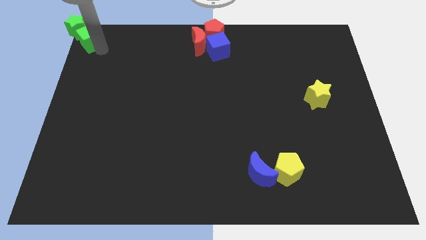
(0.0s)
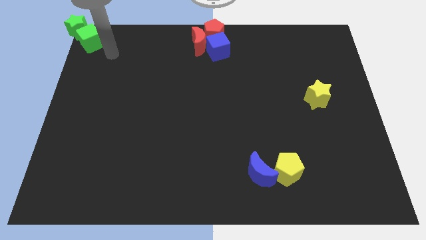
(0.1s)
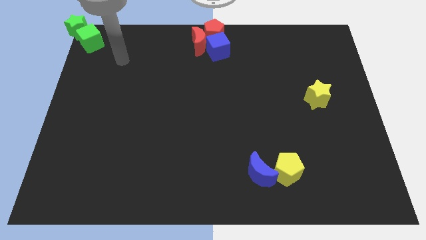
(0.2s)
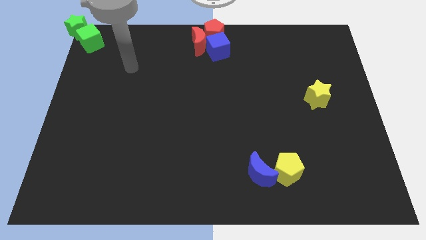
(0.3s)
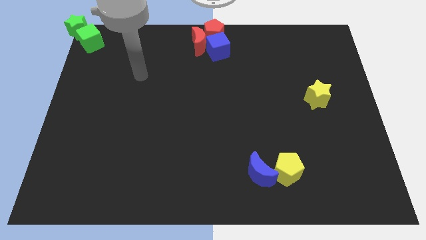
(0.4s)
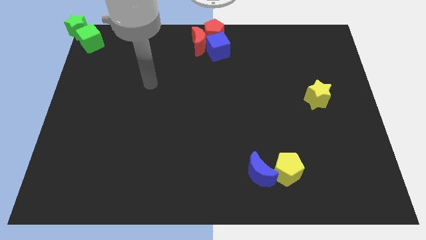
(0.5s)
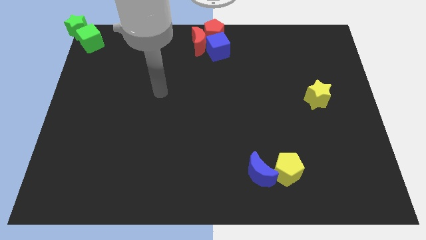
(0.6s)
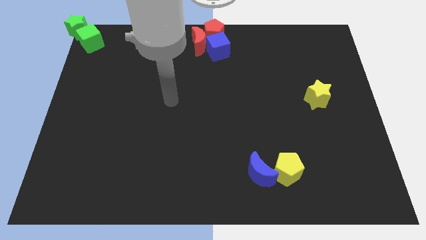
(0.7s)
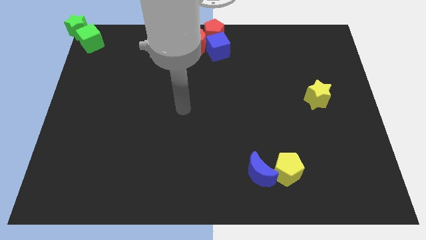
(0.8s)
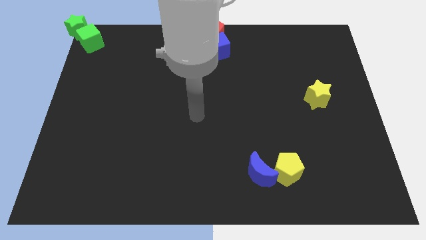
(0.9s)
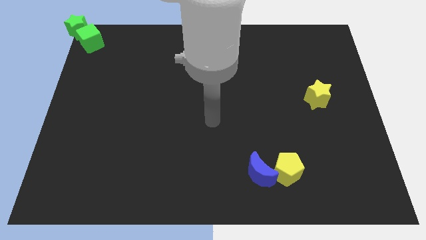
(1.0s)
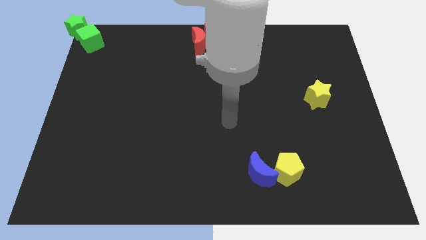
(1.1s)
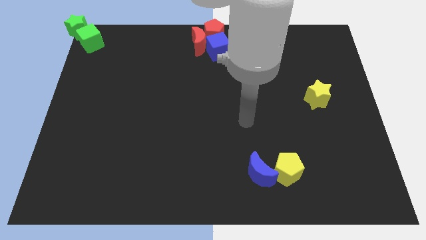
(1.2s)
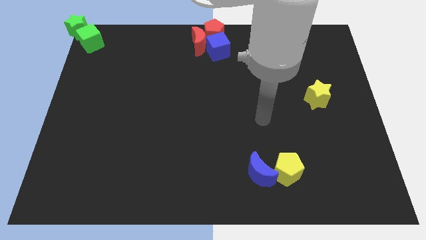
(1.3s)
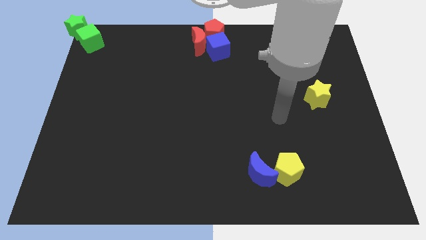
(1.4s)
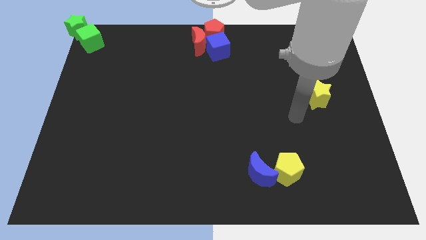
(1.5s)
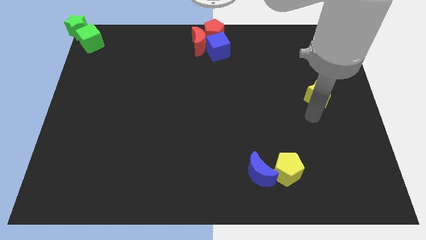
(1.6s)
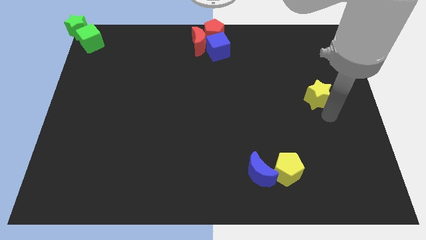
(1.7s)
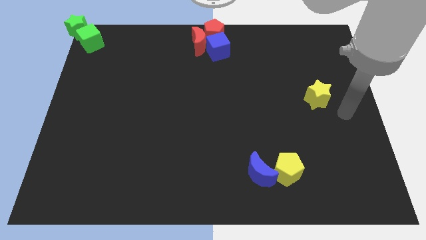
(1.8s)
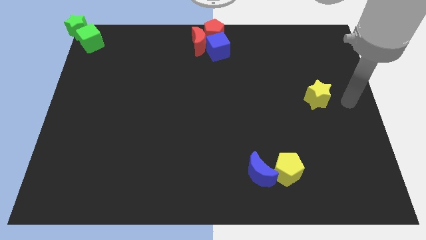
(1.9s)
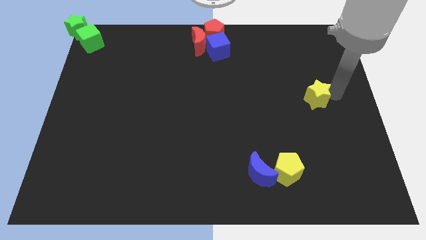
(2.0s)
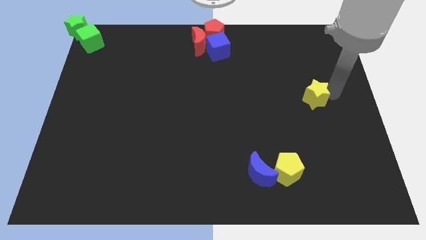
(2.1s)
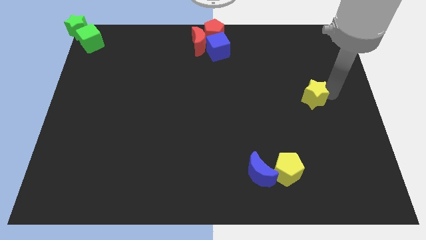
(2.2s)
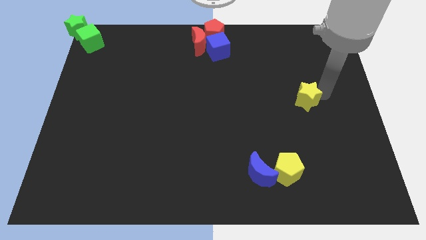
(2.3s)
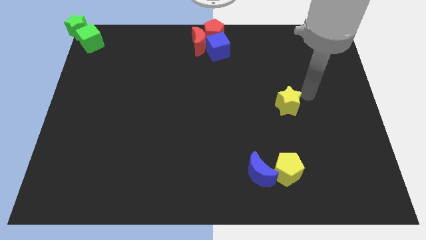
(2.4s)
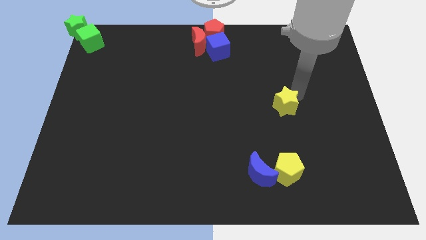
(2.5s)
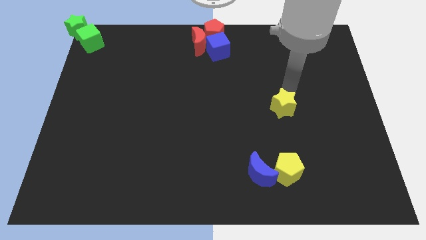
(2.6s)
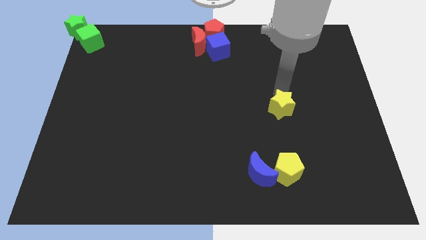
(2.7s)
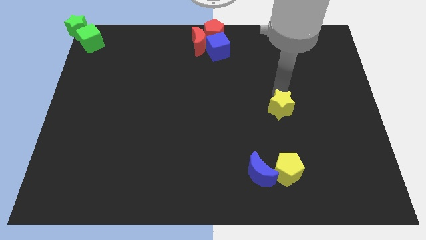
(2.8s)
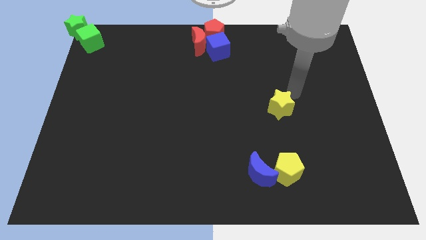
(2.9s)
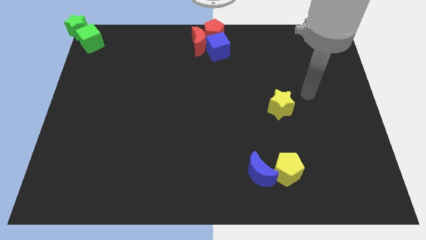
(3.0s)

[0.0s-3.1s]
put the yellow star above the yellow pentagon

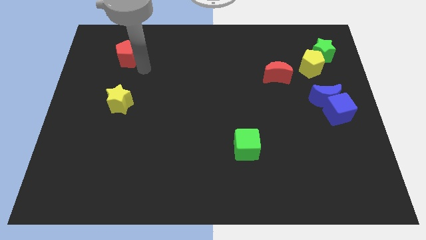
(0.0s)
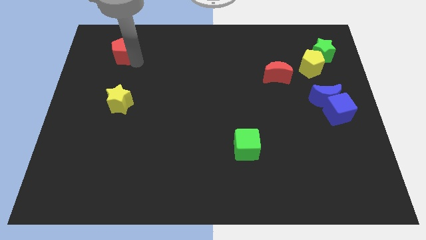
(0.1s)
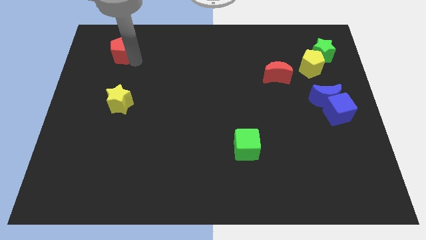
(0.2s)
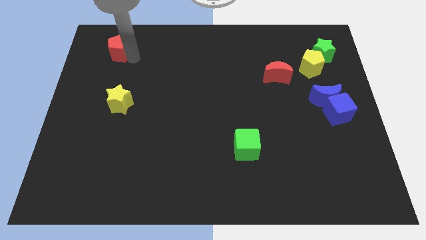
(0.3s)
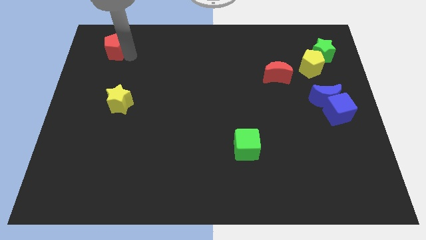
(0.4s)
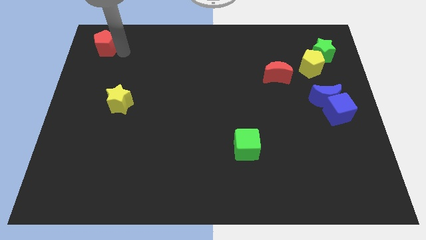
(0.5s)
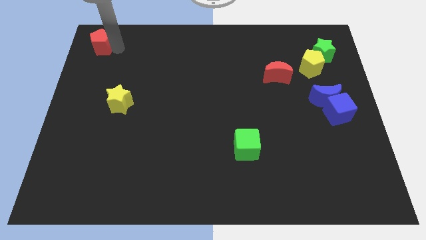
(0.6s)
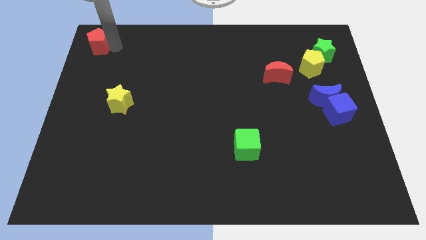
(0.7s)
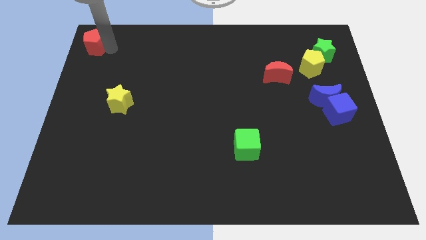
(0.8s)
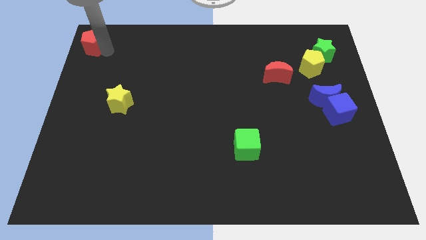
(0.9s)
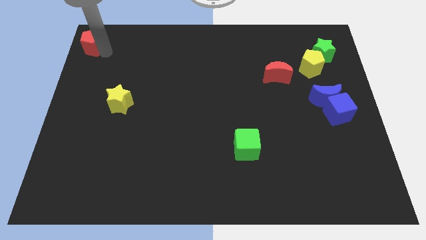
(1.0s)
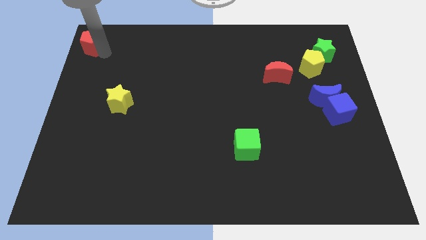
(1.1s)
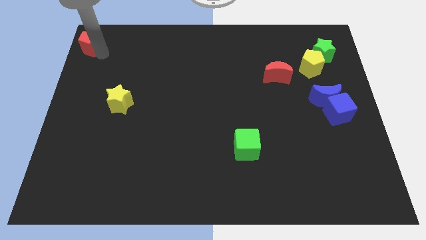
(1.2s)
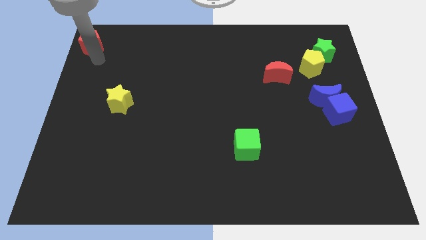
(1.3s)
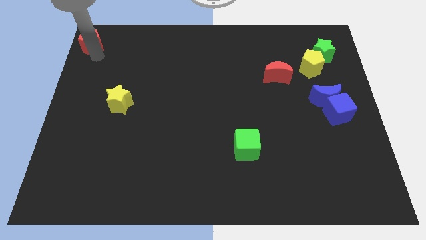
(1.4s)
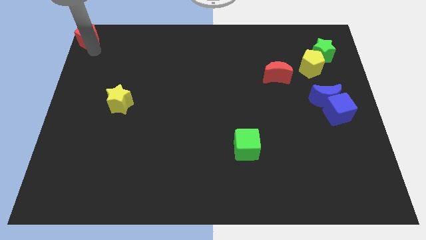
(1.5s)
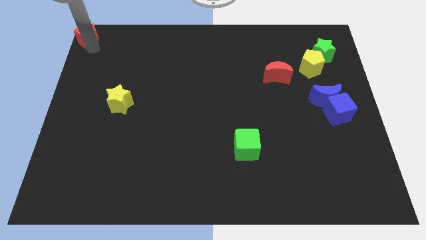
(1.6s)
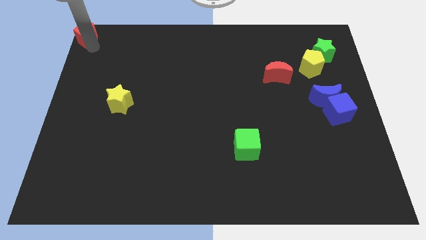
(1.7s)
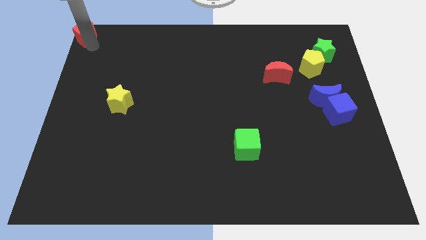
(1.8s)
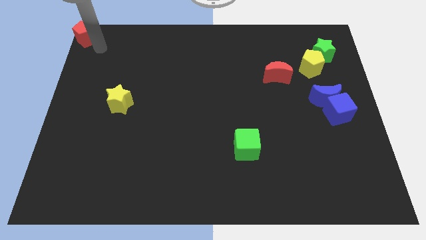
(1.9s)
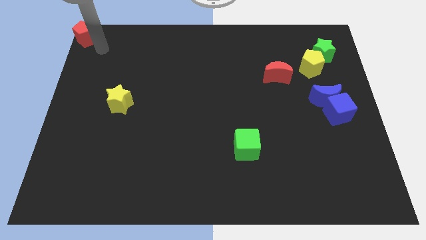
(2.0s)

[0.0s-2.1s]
push red pentagon to the top left corner of the board

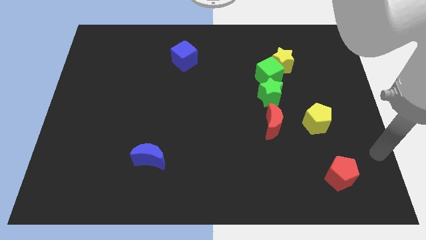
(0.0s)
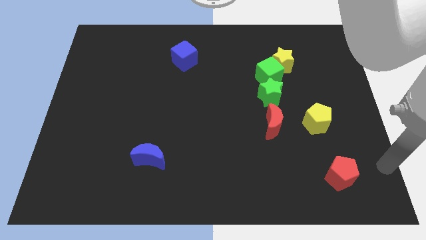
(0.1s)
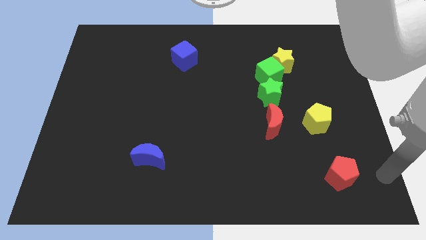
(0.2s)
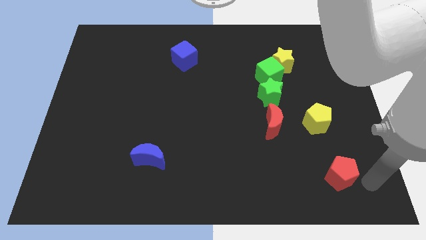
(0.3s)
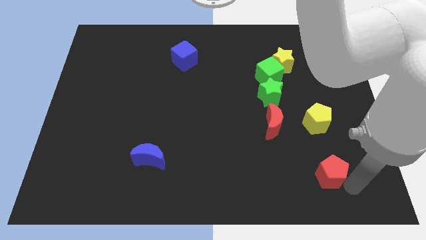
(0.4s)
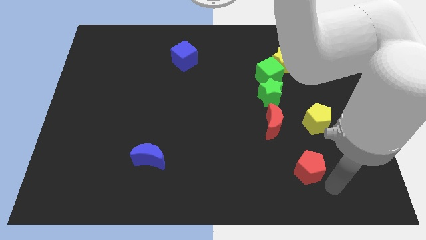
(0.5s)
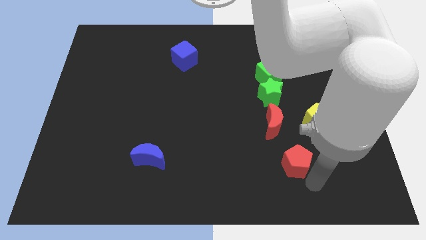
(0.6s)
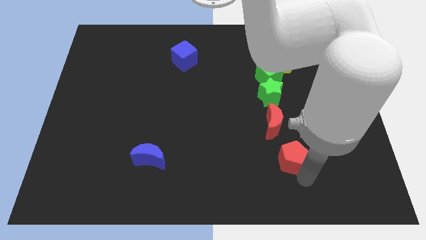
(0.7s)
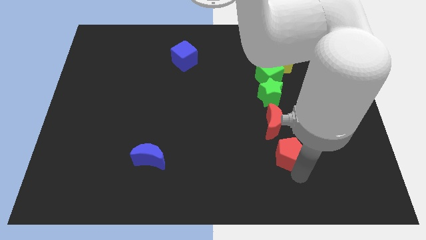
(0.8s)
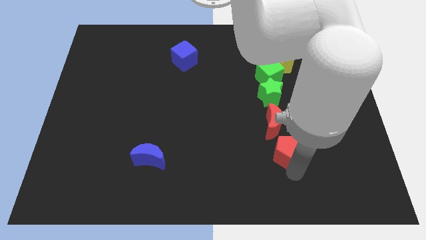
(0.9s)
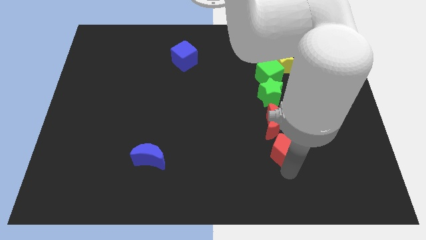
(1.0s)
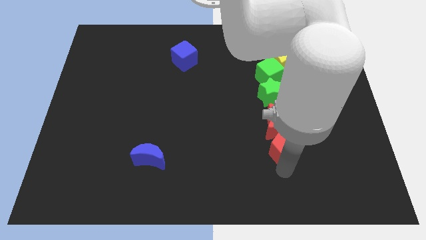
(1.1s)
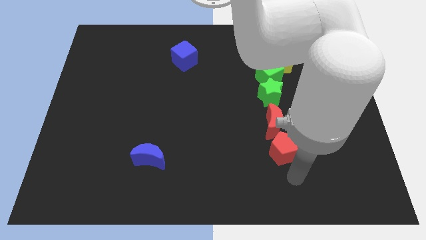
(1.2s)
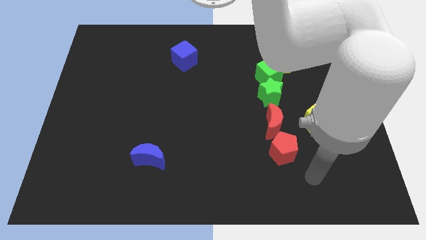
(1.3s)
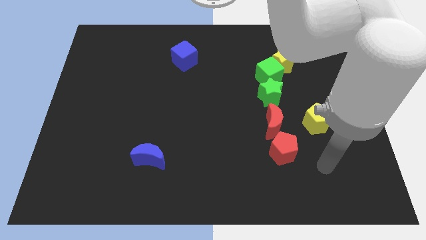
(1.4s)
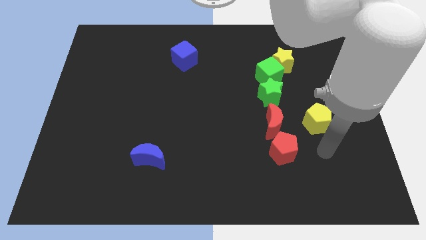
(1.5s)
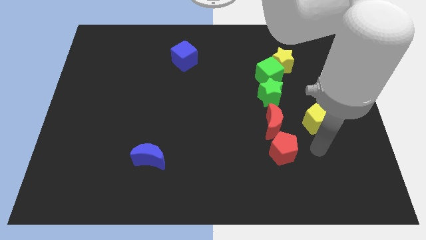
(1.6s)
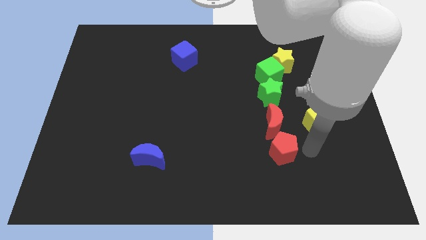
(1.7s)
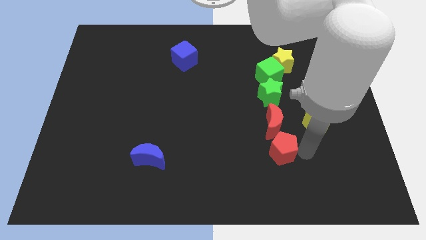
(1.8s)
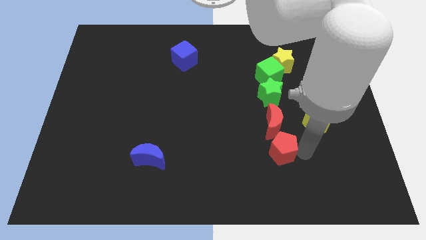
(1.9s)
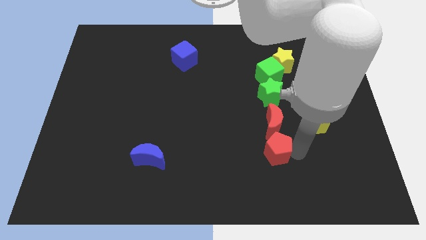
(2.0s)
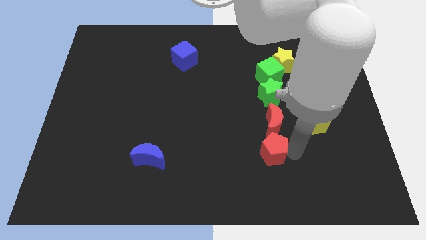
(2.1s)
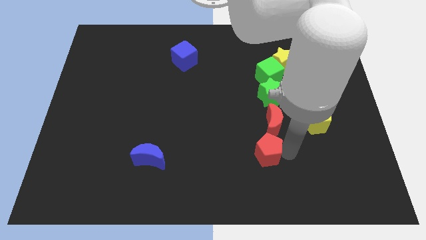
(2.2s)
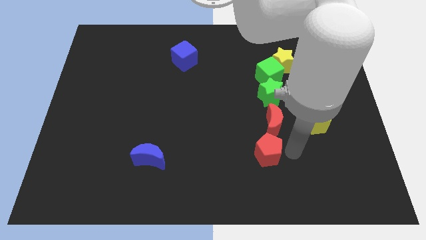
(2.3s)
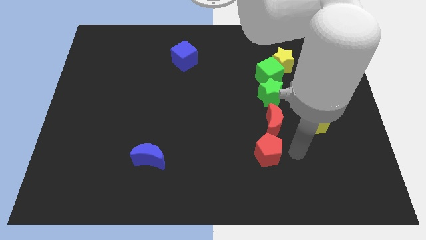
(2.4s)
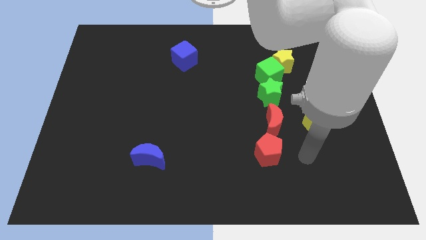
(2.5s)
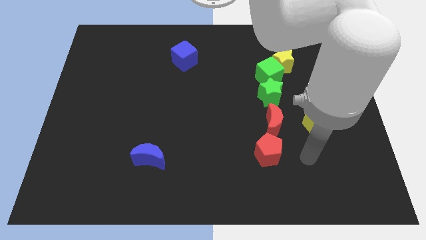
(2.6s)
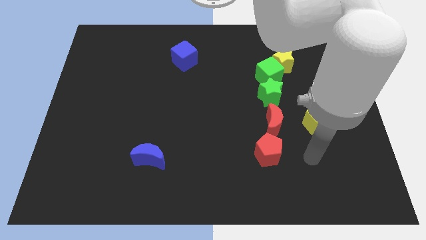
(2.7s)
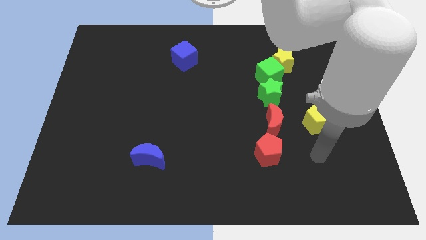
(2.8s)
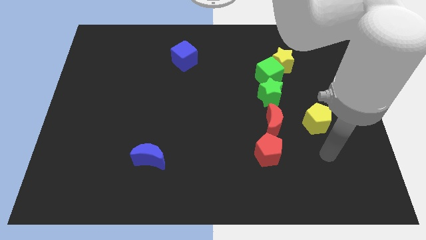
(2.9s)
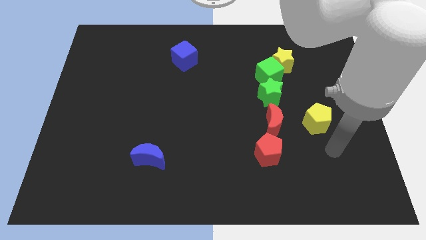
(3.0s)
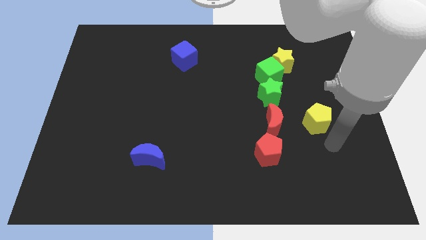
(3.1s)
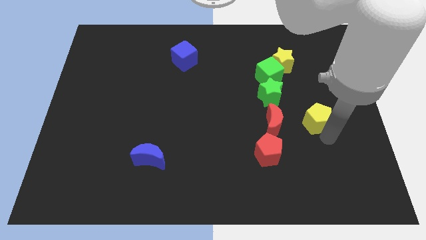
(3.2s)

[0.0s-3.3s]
place the red pentagon to the bottom of group of blocks to form vertical line

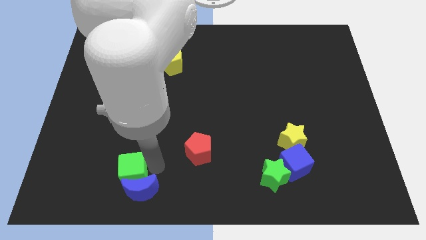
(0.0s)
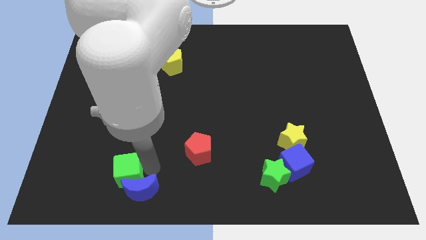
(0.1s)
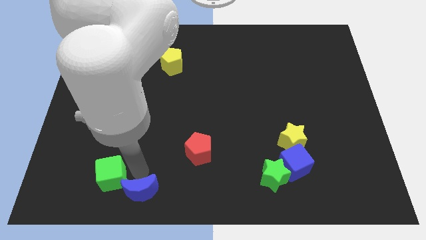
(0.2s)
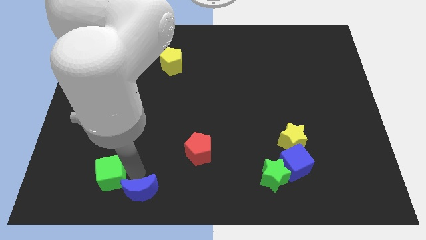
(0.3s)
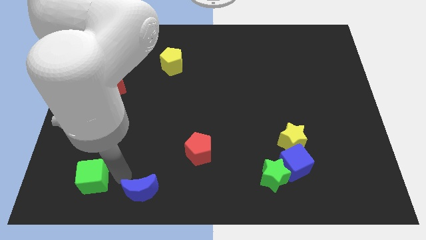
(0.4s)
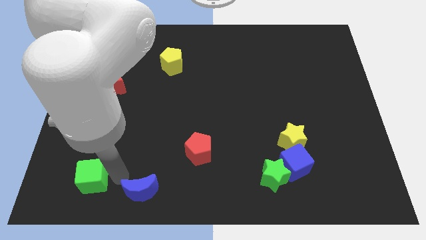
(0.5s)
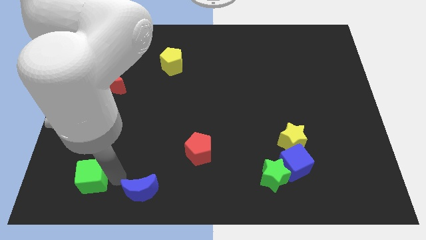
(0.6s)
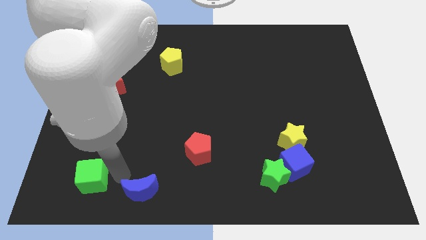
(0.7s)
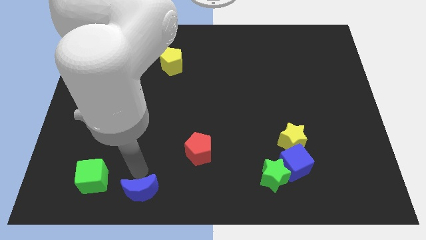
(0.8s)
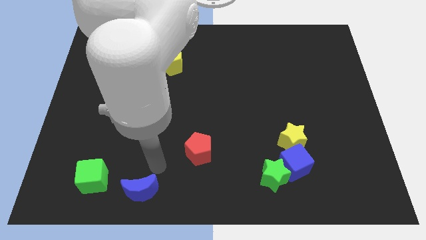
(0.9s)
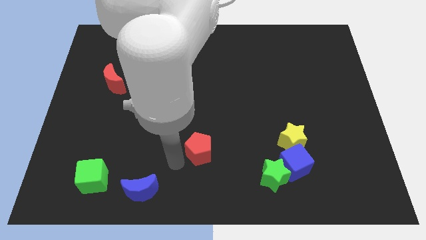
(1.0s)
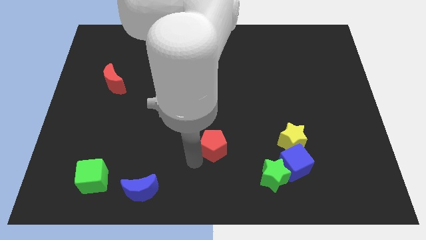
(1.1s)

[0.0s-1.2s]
separate the green cube from the blue crescent
